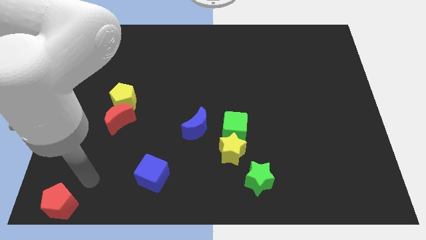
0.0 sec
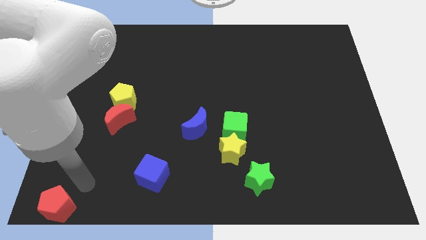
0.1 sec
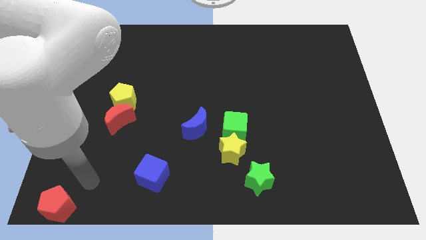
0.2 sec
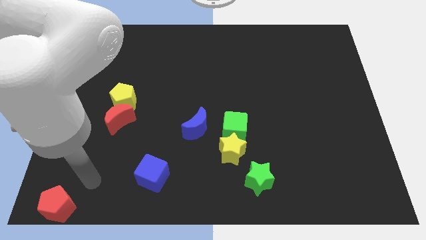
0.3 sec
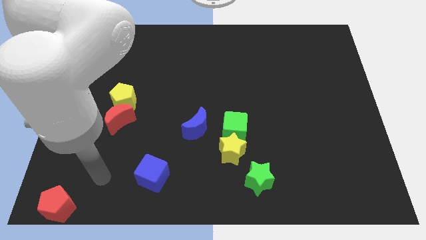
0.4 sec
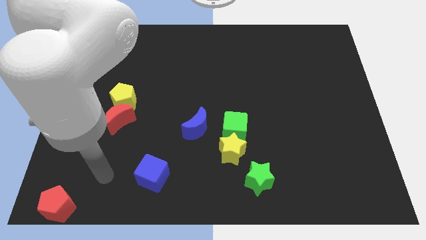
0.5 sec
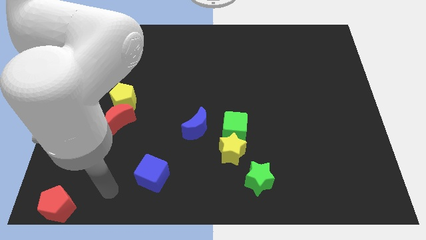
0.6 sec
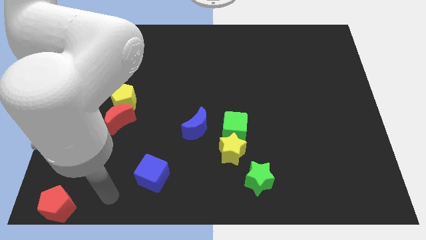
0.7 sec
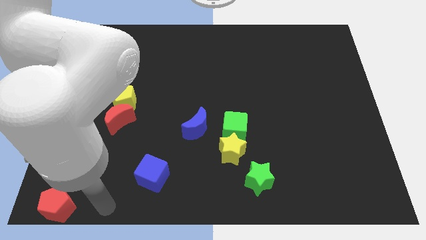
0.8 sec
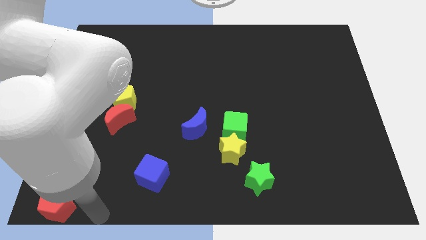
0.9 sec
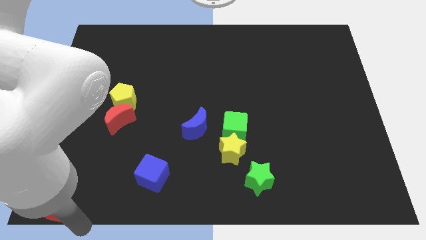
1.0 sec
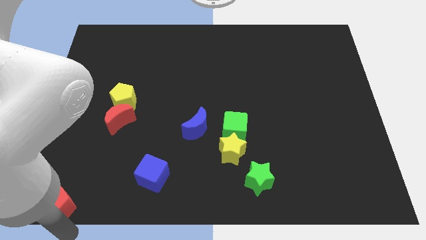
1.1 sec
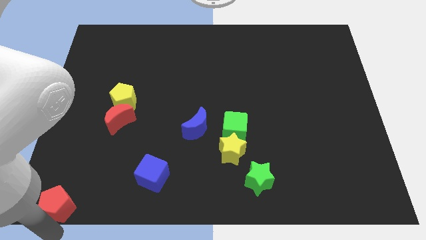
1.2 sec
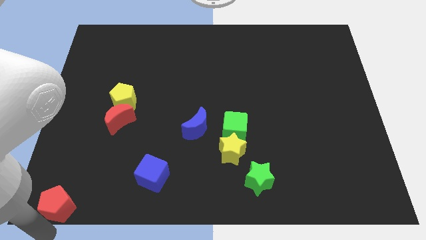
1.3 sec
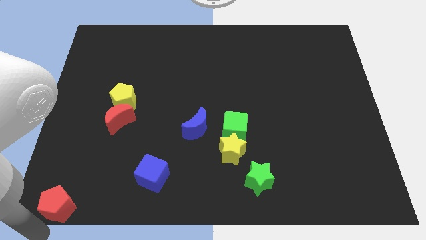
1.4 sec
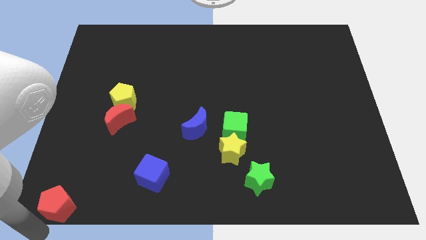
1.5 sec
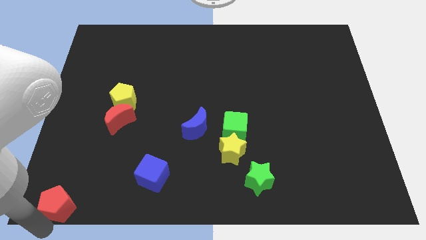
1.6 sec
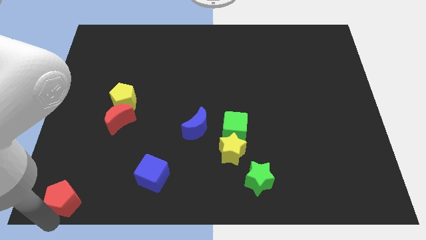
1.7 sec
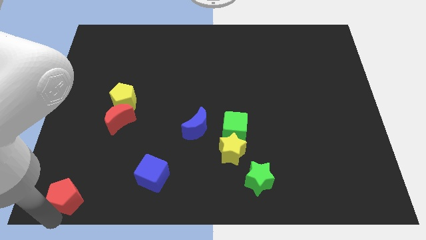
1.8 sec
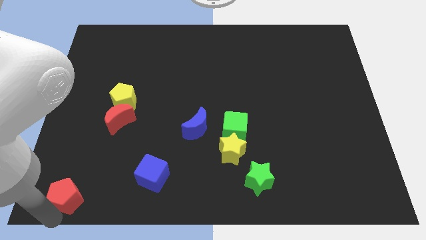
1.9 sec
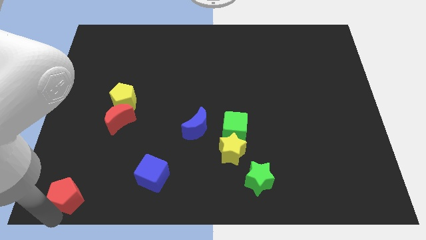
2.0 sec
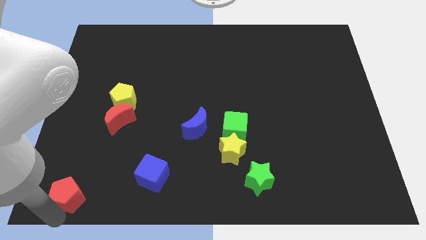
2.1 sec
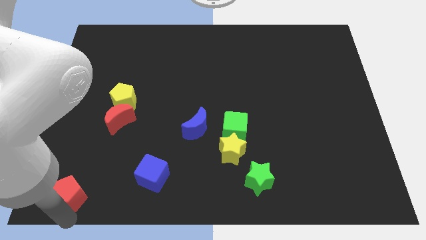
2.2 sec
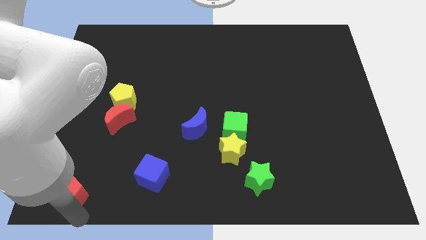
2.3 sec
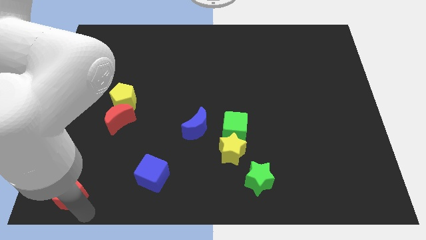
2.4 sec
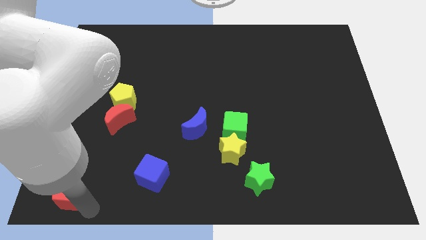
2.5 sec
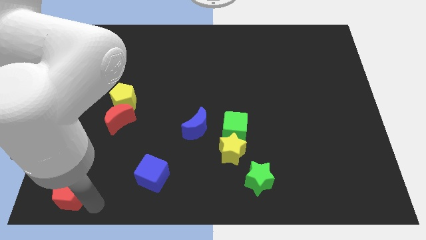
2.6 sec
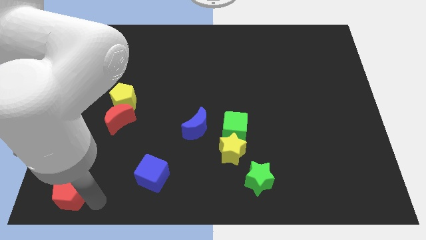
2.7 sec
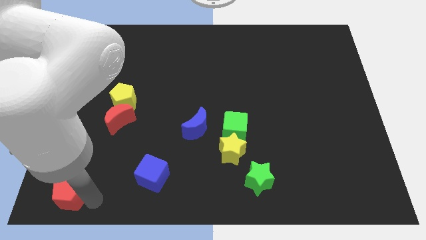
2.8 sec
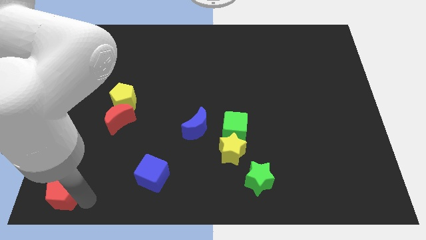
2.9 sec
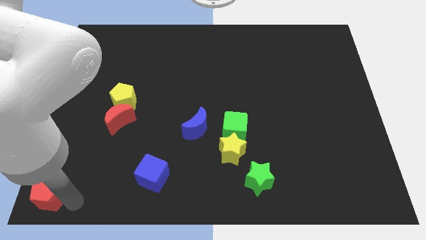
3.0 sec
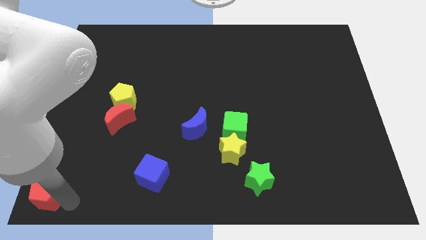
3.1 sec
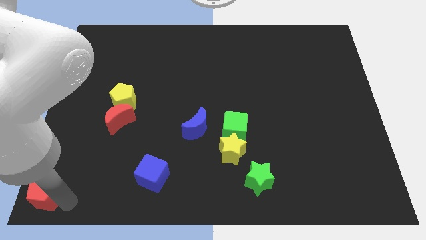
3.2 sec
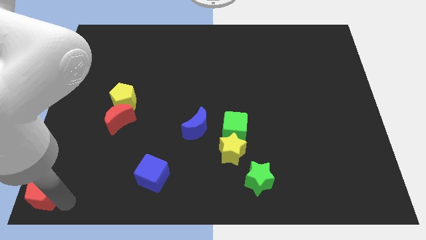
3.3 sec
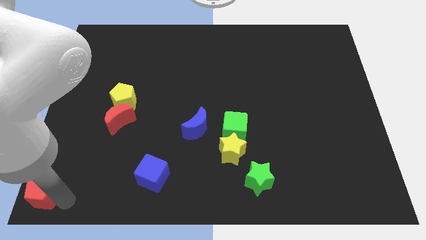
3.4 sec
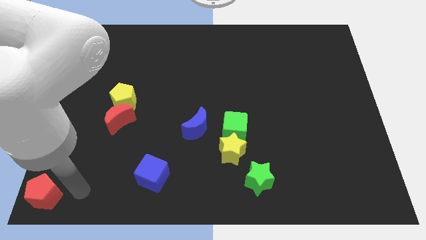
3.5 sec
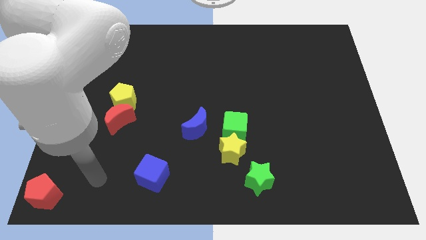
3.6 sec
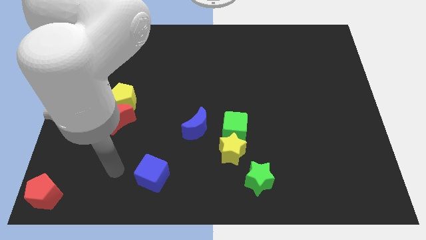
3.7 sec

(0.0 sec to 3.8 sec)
push the red pentagon at the bottom left corner of the board

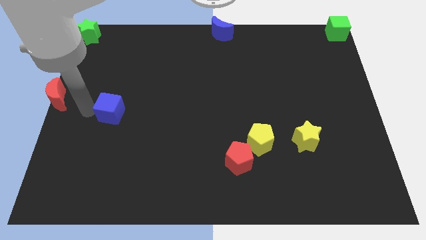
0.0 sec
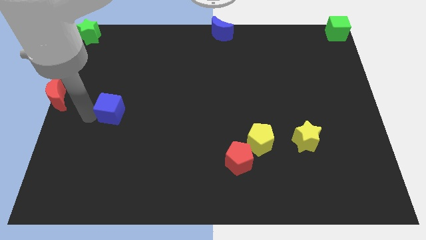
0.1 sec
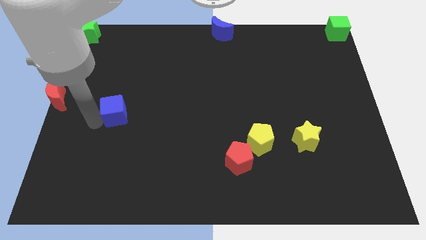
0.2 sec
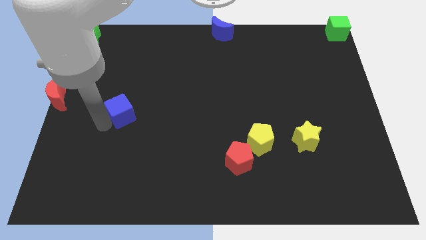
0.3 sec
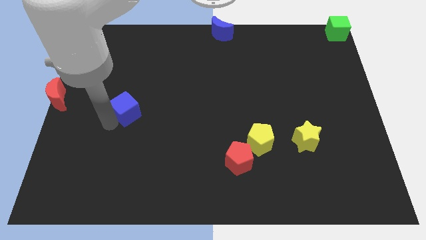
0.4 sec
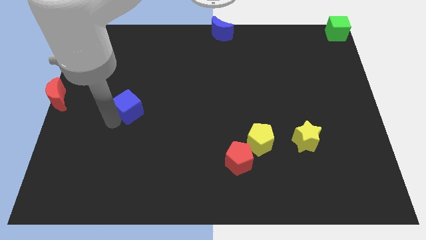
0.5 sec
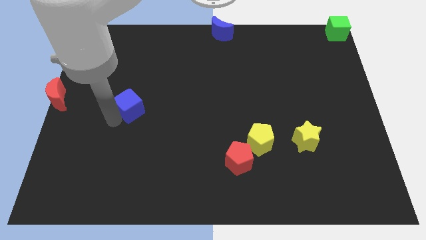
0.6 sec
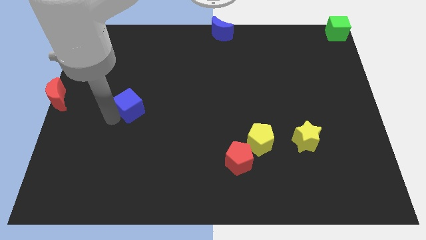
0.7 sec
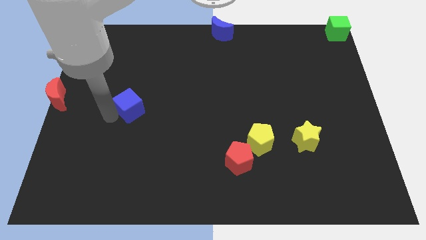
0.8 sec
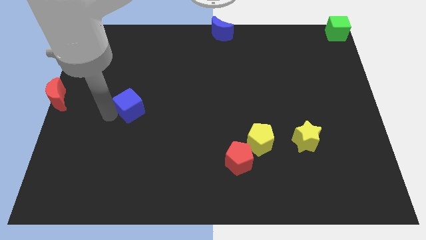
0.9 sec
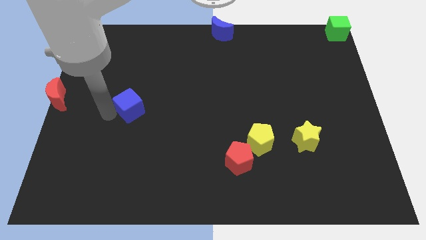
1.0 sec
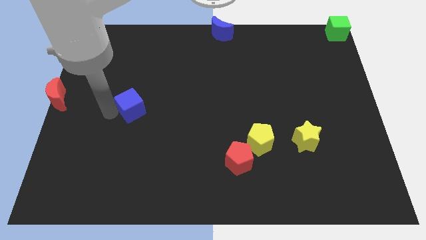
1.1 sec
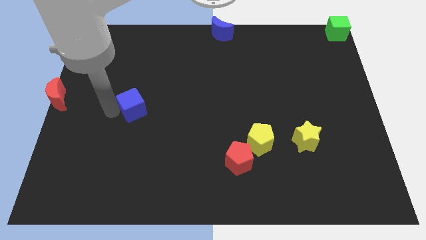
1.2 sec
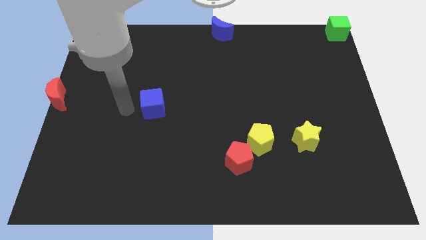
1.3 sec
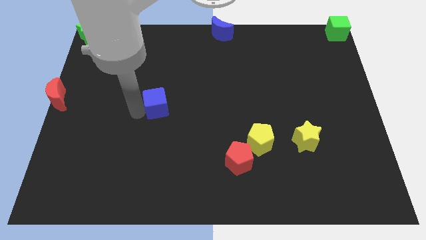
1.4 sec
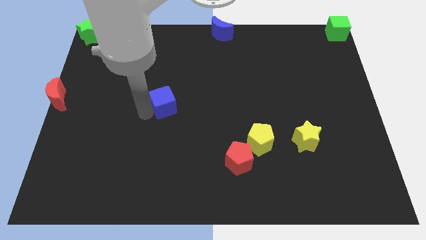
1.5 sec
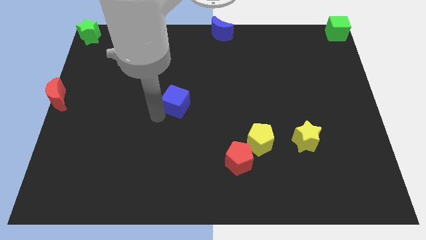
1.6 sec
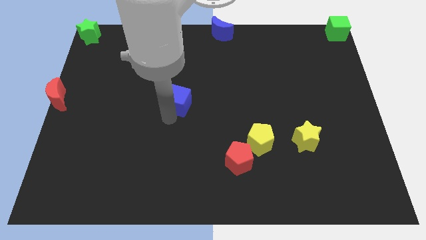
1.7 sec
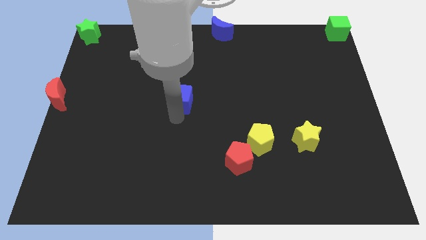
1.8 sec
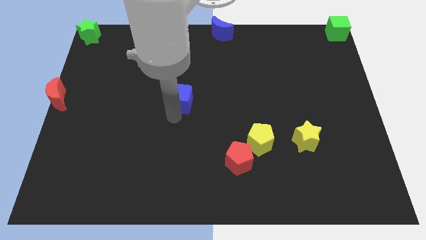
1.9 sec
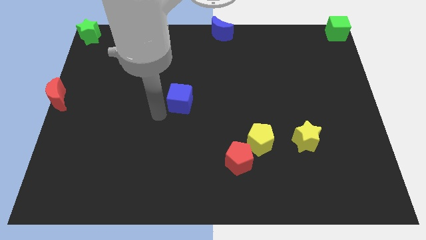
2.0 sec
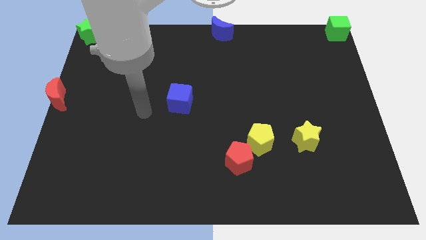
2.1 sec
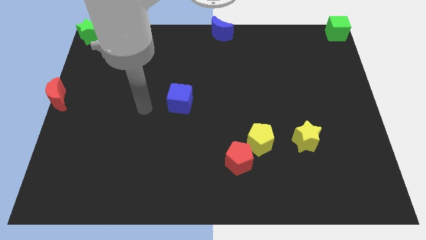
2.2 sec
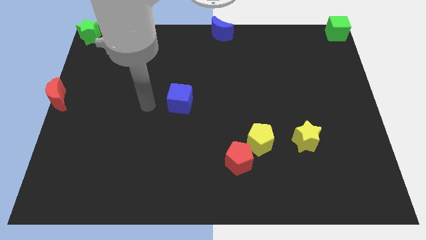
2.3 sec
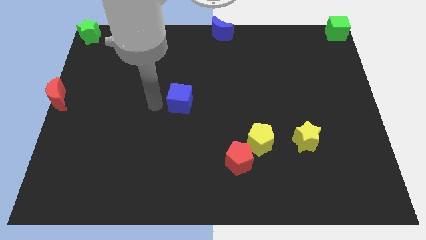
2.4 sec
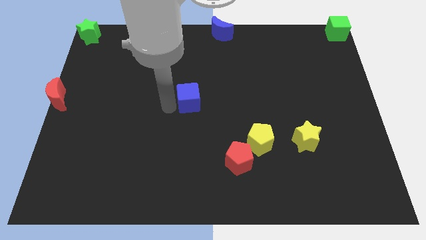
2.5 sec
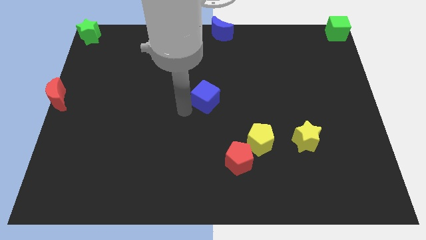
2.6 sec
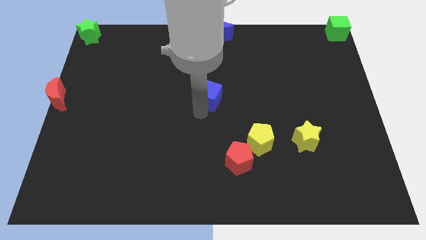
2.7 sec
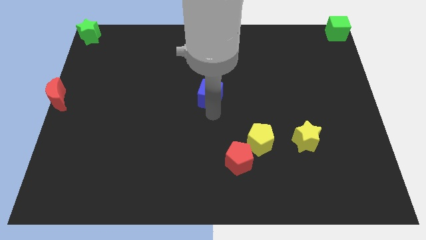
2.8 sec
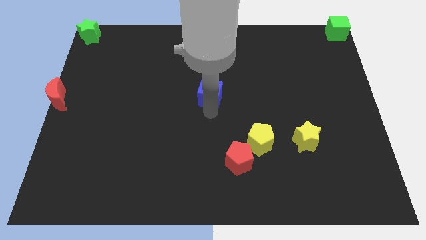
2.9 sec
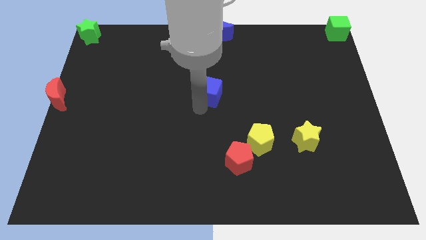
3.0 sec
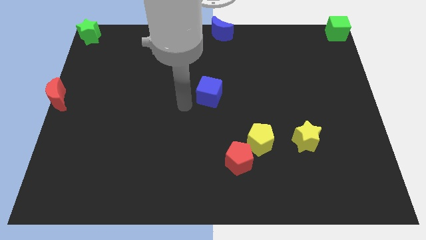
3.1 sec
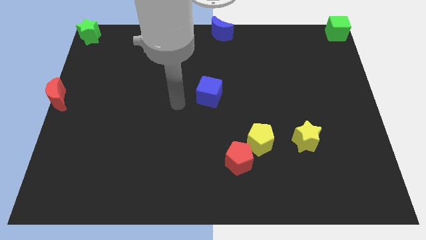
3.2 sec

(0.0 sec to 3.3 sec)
put the blue cube at the center of the board

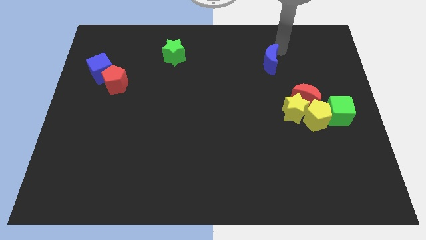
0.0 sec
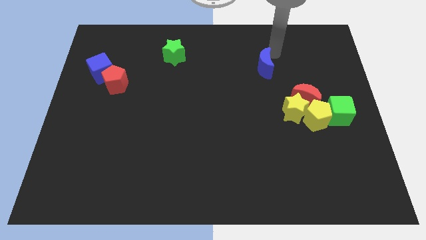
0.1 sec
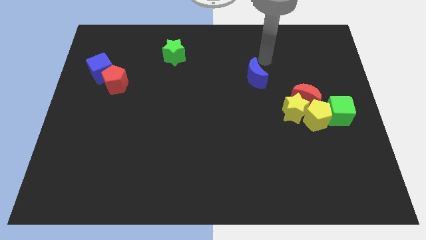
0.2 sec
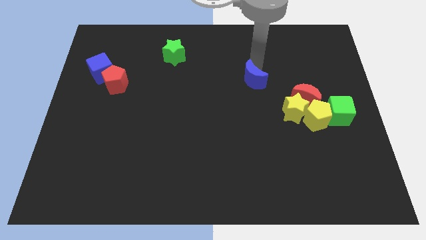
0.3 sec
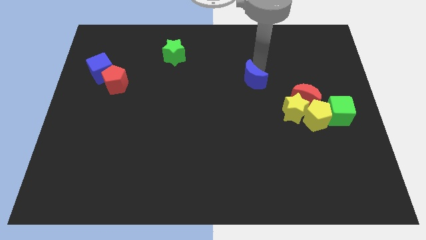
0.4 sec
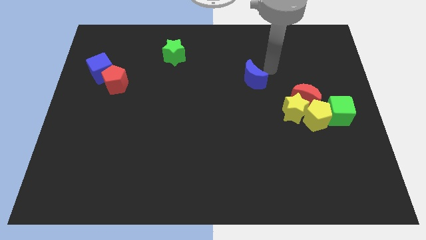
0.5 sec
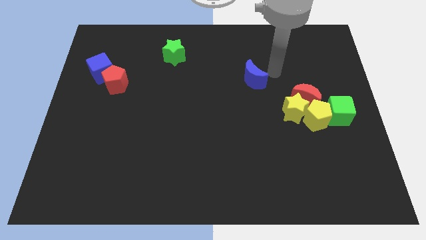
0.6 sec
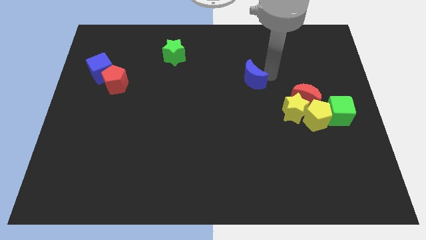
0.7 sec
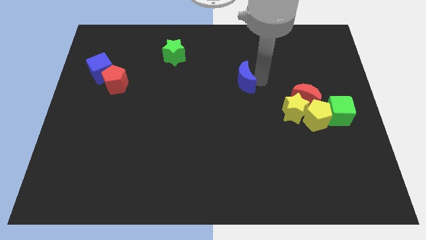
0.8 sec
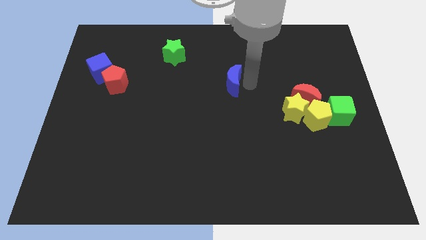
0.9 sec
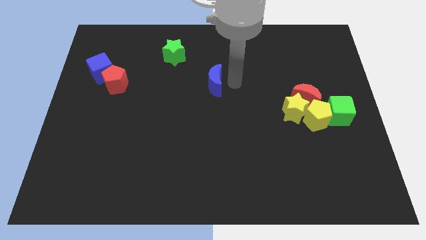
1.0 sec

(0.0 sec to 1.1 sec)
slide blue moon towards center

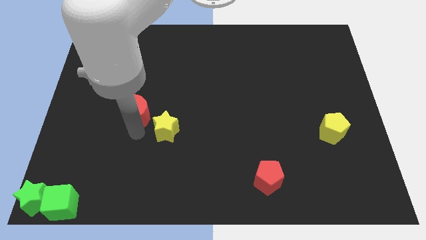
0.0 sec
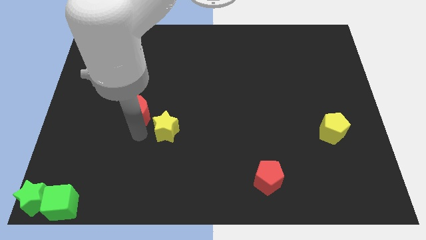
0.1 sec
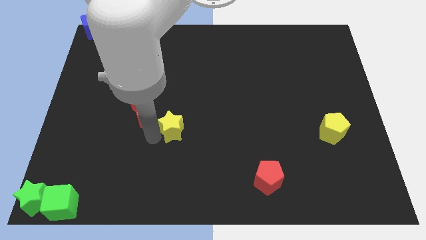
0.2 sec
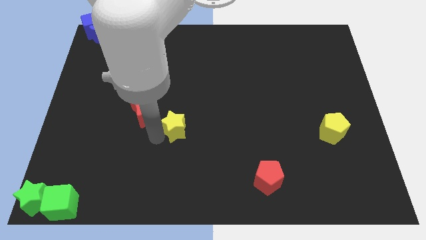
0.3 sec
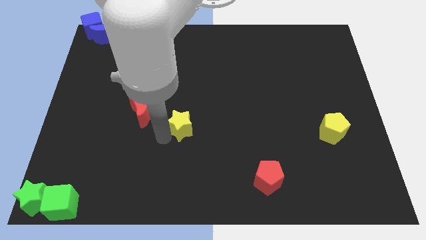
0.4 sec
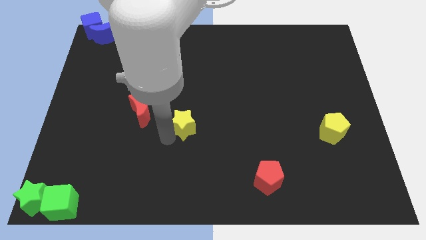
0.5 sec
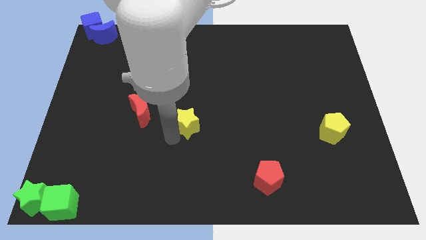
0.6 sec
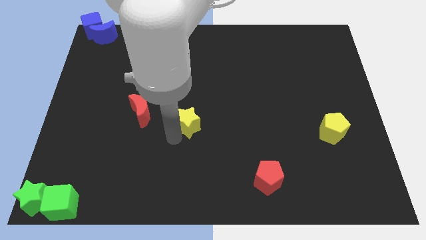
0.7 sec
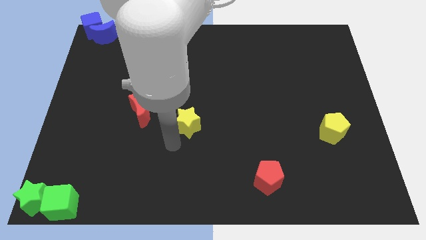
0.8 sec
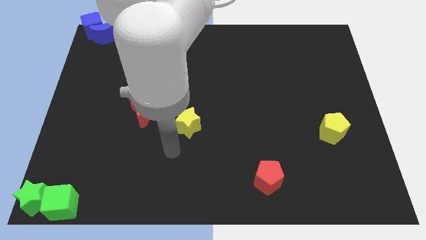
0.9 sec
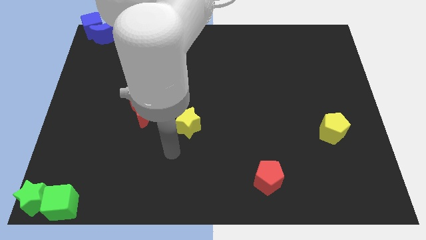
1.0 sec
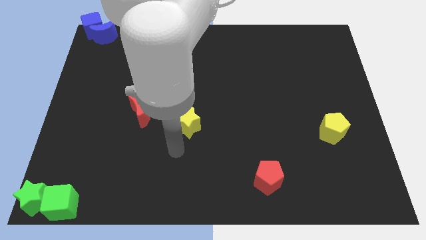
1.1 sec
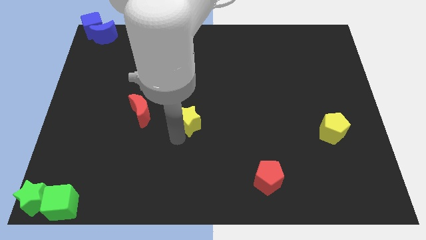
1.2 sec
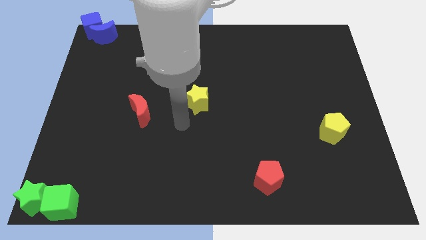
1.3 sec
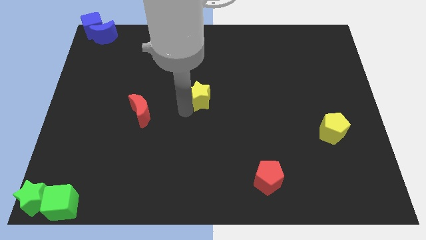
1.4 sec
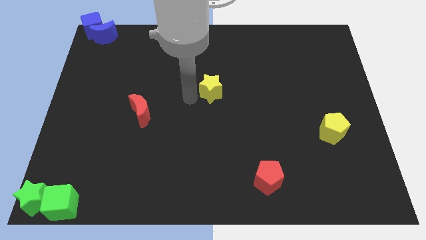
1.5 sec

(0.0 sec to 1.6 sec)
push the yellow star at the center of the table
